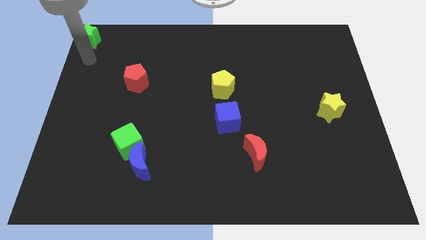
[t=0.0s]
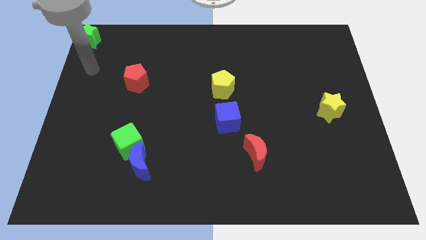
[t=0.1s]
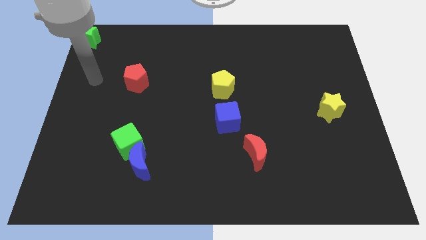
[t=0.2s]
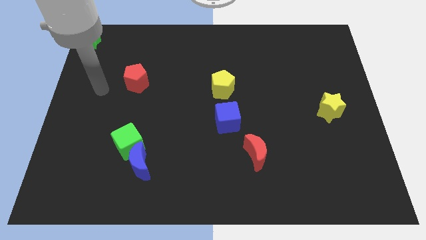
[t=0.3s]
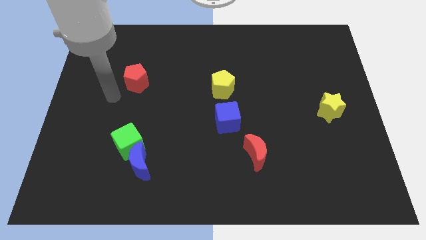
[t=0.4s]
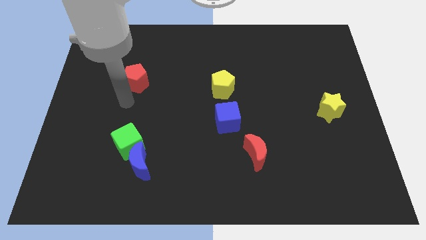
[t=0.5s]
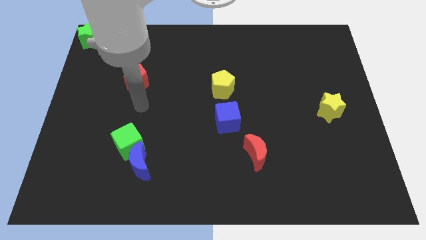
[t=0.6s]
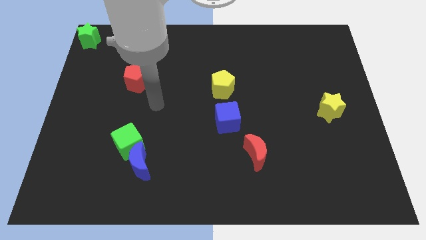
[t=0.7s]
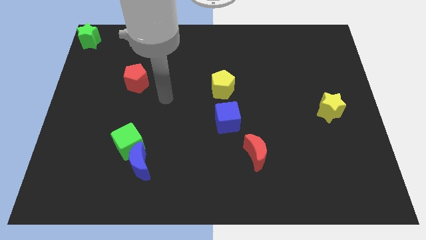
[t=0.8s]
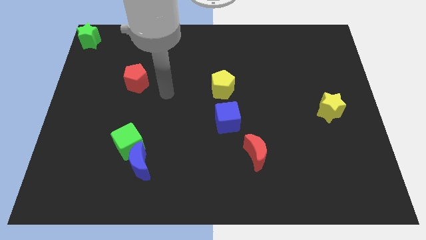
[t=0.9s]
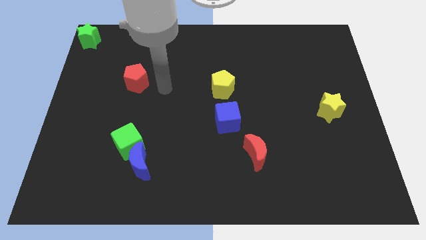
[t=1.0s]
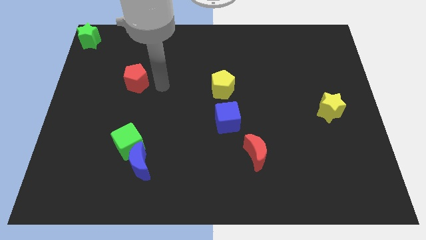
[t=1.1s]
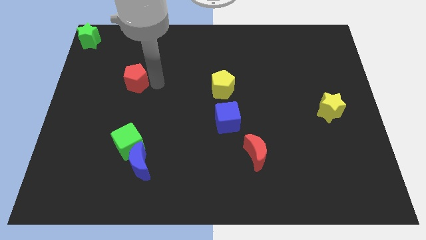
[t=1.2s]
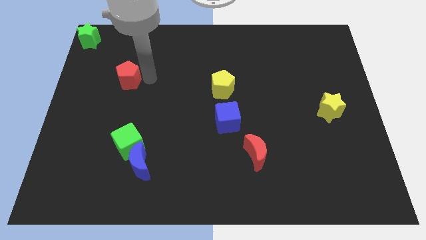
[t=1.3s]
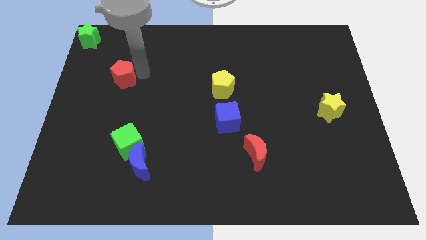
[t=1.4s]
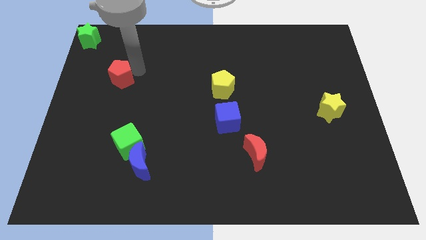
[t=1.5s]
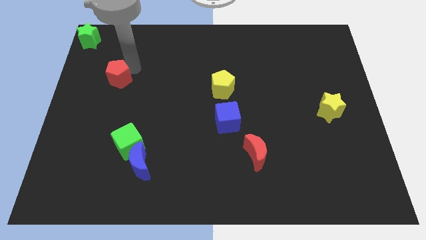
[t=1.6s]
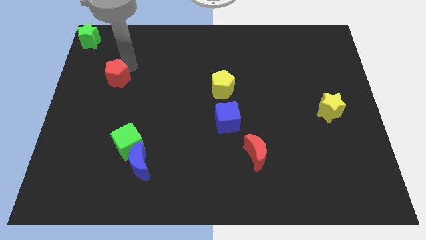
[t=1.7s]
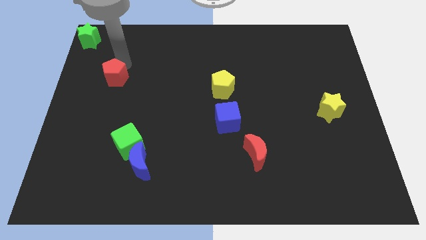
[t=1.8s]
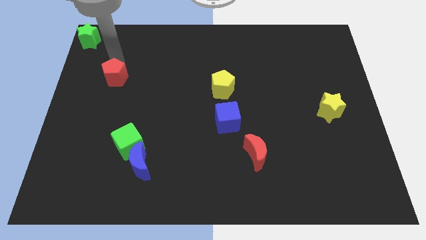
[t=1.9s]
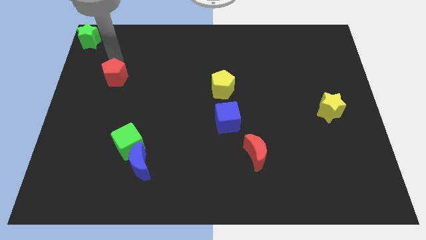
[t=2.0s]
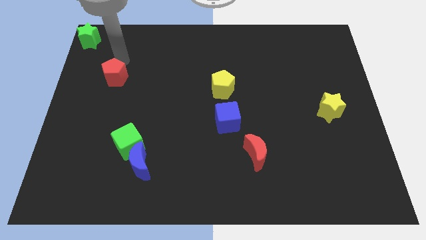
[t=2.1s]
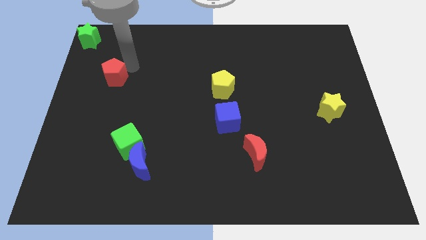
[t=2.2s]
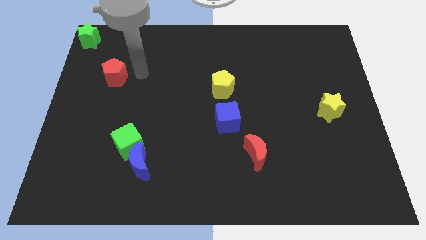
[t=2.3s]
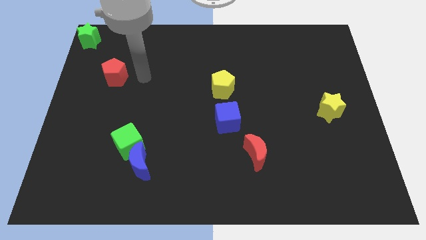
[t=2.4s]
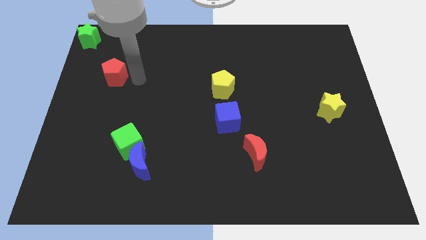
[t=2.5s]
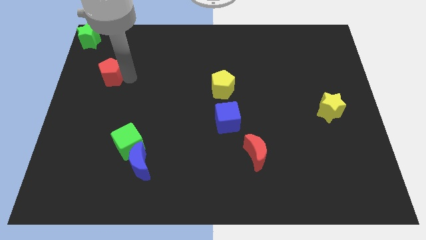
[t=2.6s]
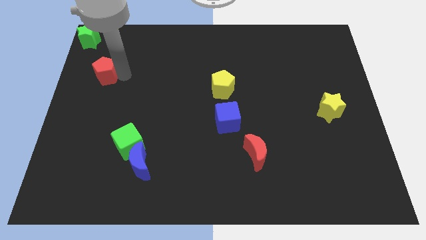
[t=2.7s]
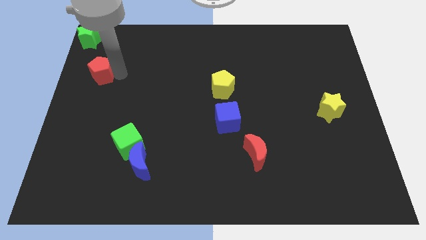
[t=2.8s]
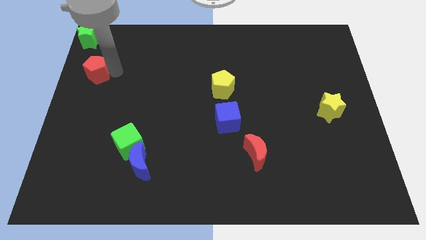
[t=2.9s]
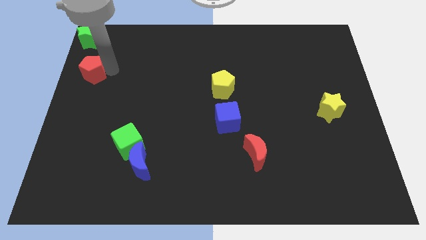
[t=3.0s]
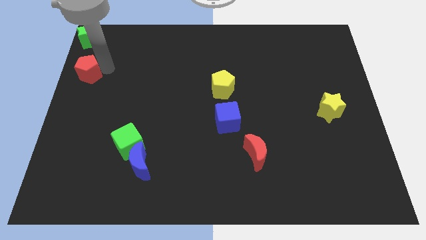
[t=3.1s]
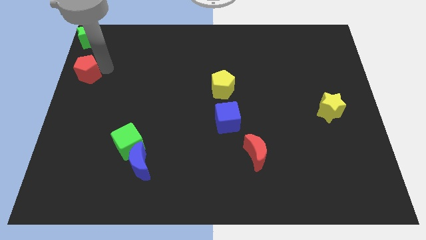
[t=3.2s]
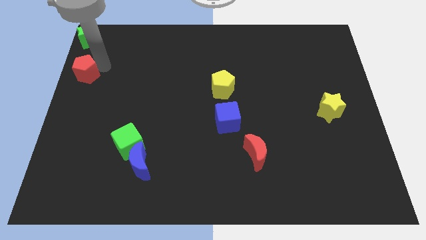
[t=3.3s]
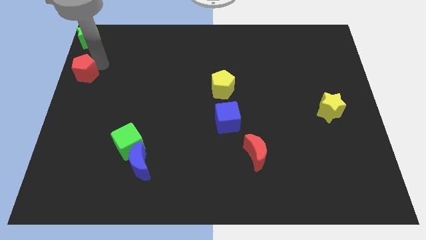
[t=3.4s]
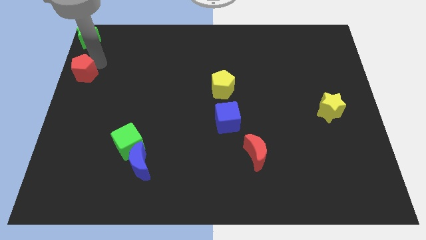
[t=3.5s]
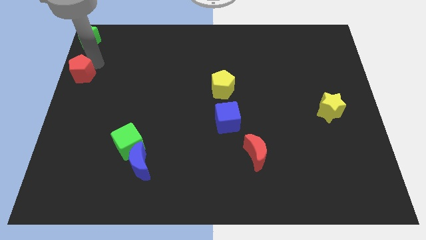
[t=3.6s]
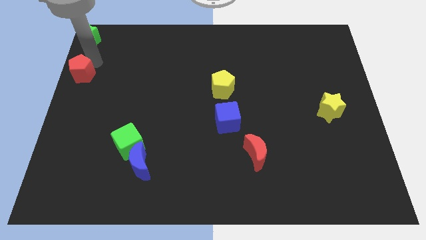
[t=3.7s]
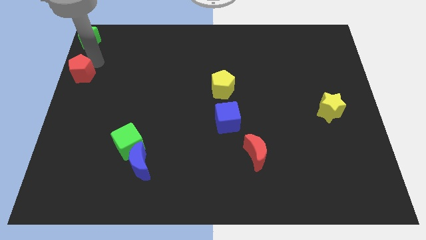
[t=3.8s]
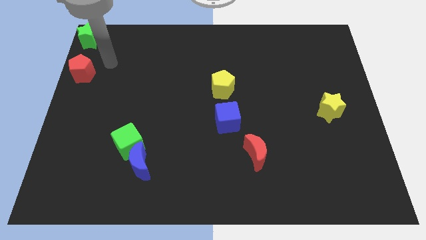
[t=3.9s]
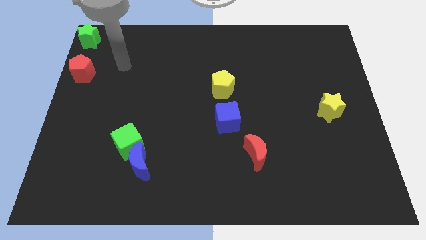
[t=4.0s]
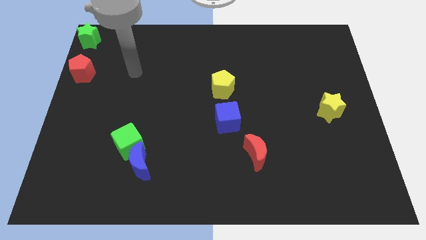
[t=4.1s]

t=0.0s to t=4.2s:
place the red pentagon at the bottom of green star

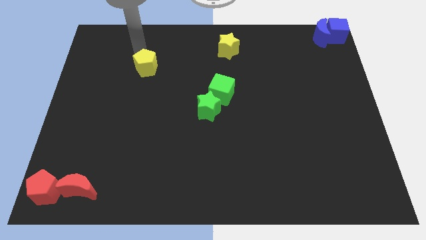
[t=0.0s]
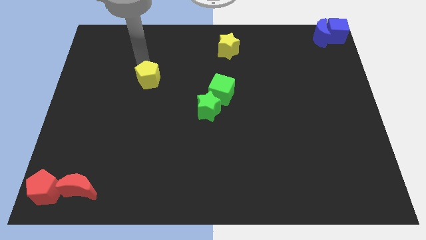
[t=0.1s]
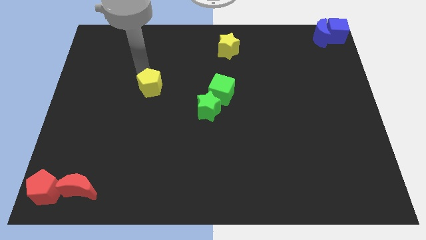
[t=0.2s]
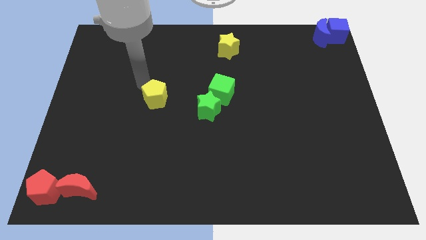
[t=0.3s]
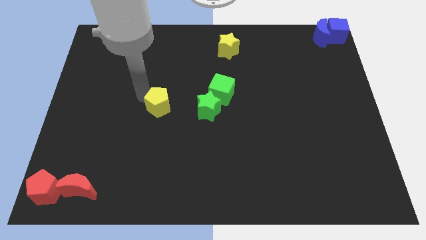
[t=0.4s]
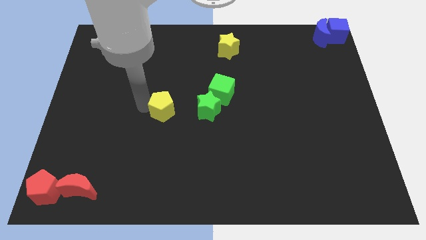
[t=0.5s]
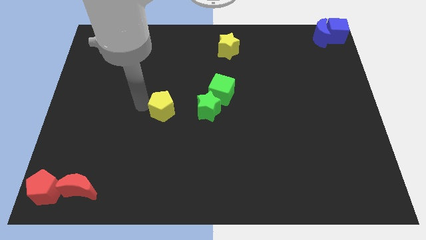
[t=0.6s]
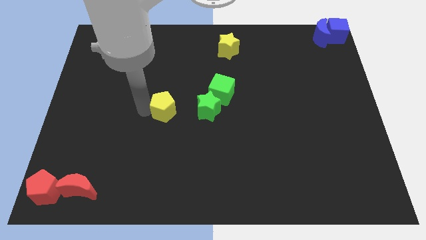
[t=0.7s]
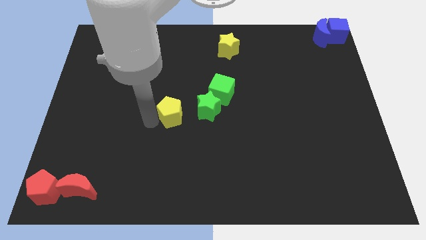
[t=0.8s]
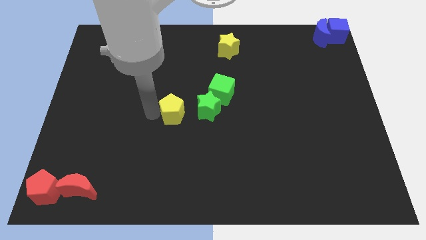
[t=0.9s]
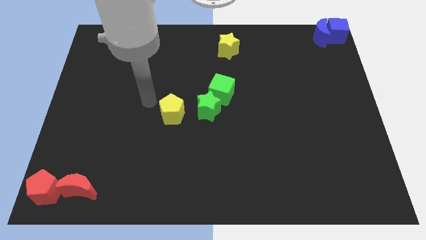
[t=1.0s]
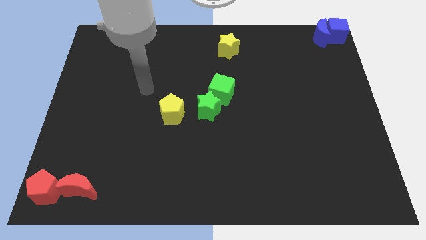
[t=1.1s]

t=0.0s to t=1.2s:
move the yellow pentagon diagonal to the left of the green star

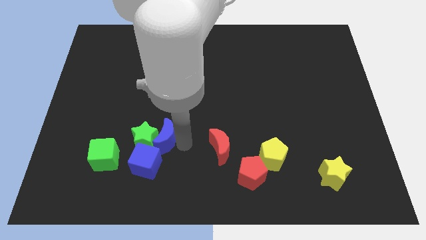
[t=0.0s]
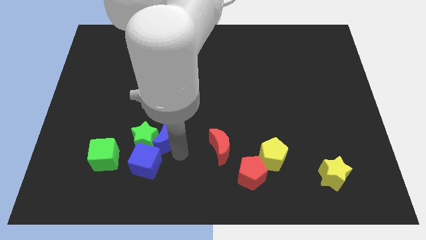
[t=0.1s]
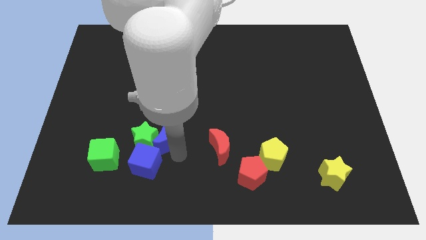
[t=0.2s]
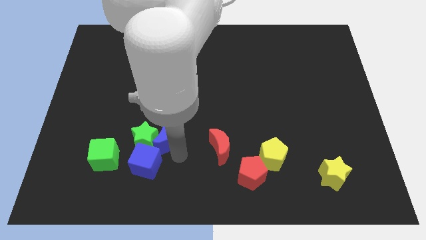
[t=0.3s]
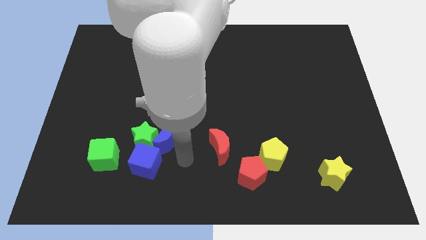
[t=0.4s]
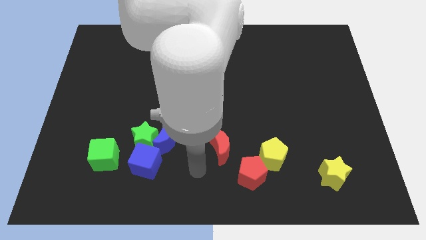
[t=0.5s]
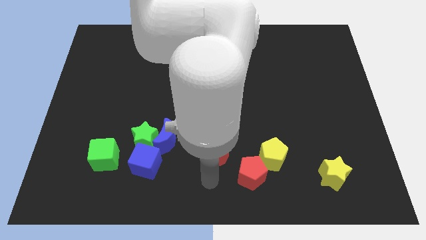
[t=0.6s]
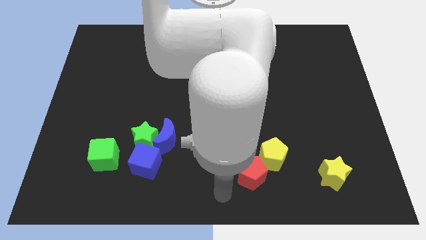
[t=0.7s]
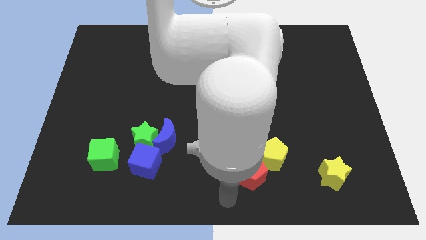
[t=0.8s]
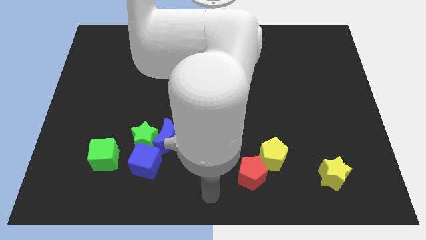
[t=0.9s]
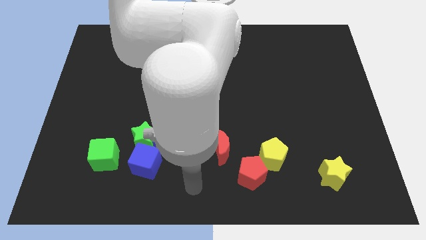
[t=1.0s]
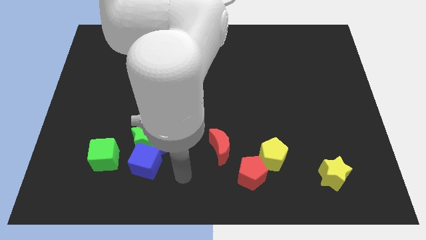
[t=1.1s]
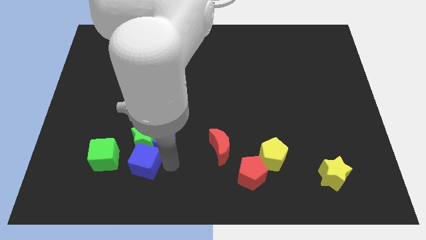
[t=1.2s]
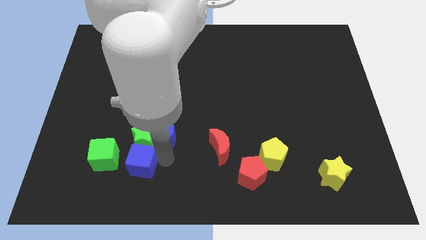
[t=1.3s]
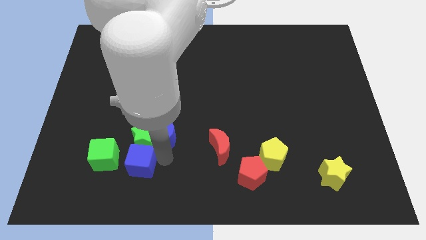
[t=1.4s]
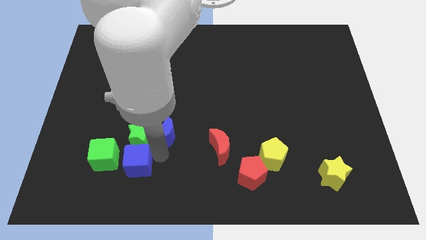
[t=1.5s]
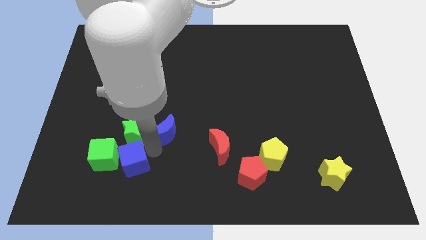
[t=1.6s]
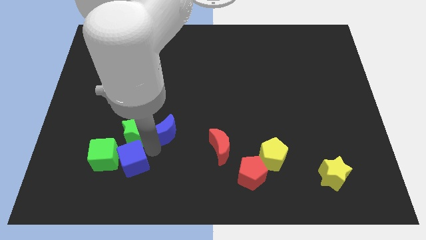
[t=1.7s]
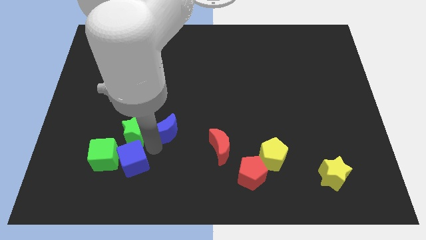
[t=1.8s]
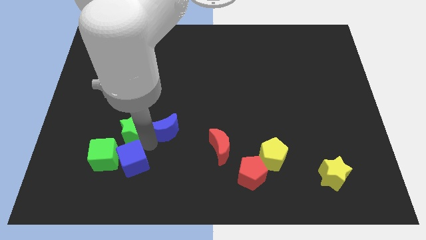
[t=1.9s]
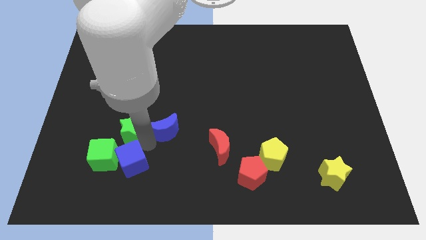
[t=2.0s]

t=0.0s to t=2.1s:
go and separate the green star along with the blue cube and the blue crescent

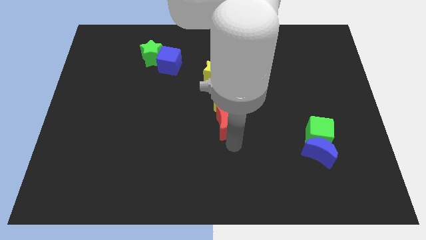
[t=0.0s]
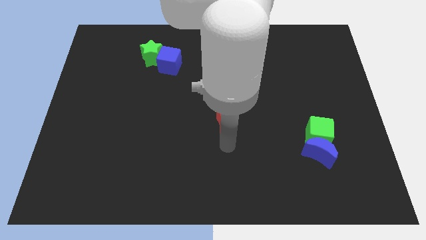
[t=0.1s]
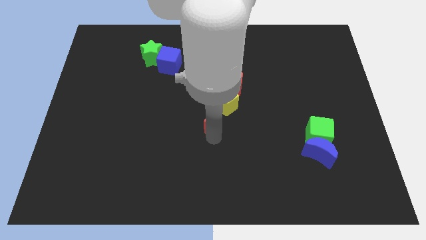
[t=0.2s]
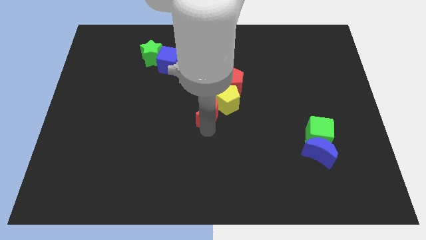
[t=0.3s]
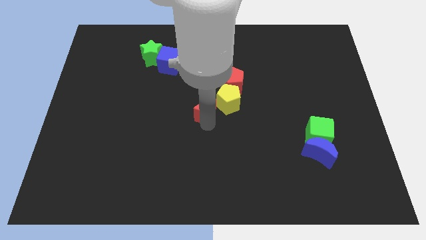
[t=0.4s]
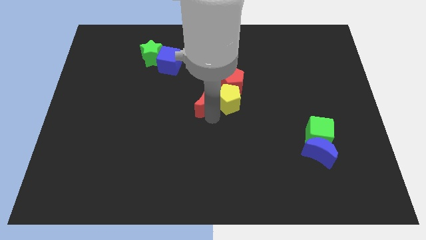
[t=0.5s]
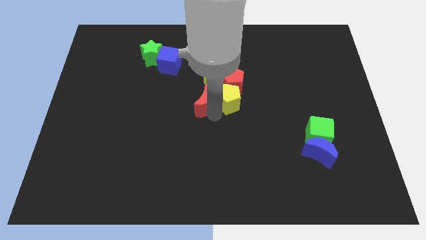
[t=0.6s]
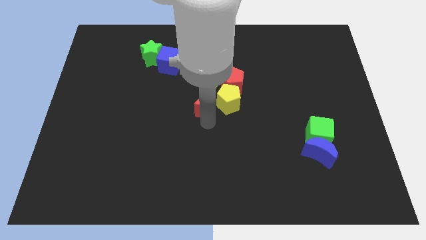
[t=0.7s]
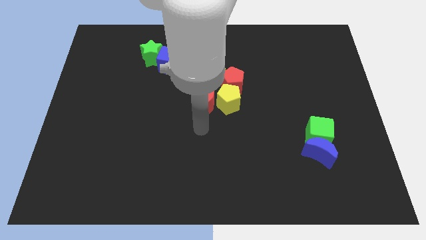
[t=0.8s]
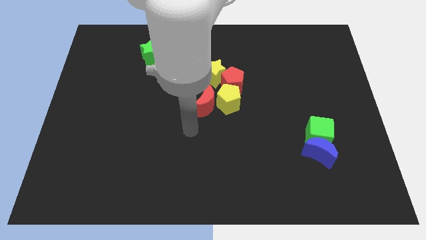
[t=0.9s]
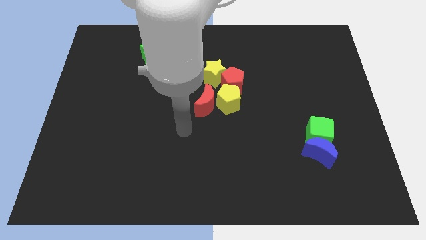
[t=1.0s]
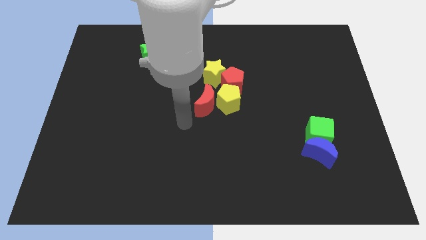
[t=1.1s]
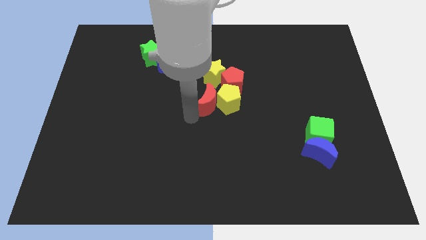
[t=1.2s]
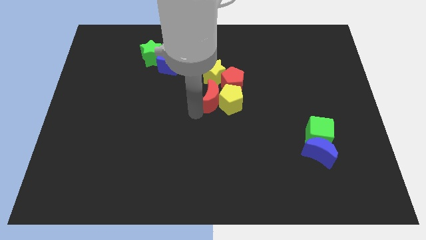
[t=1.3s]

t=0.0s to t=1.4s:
drag the red moon slightly upwards
